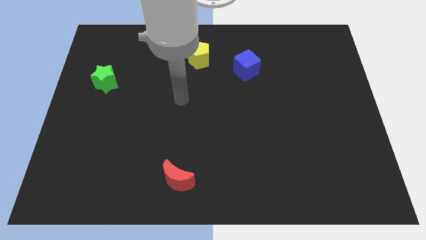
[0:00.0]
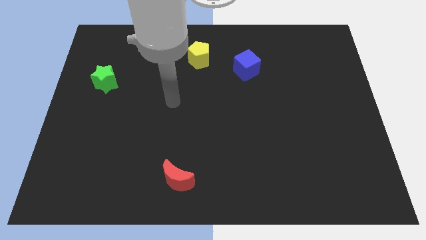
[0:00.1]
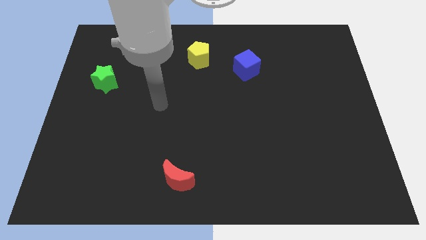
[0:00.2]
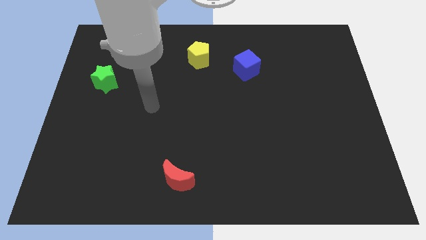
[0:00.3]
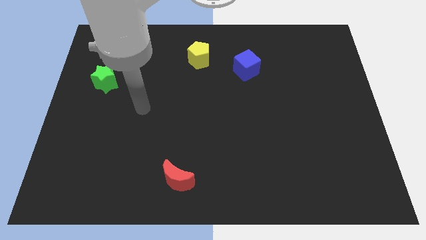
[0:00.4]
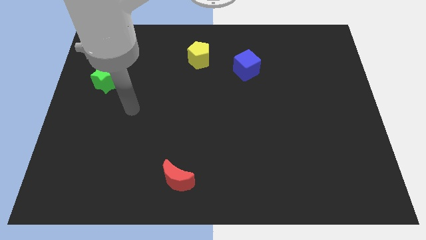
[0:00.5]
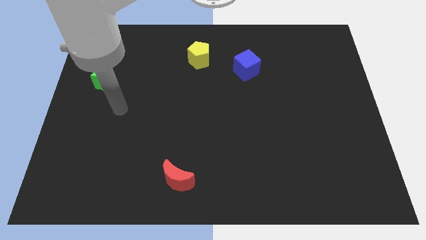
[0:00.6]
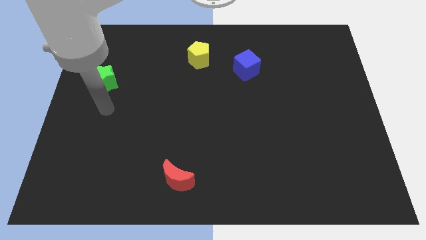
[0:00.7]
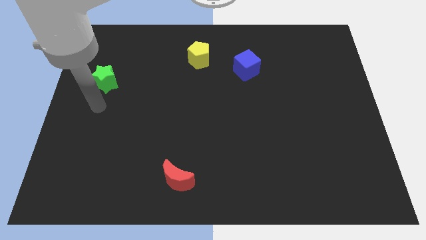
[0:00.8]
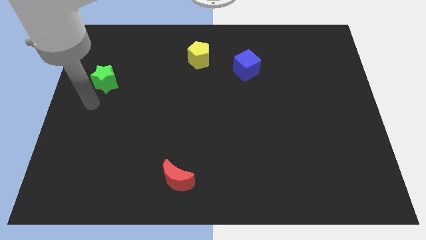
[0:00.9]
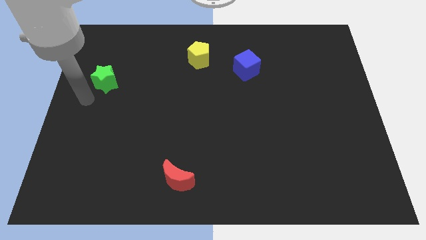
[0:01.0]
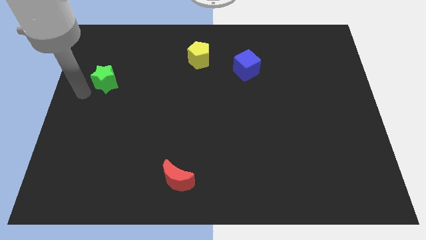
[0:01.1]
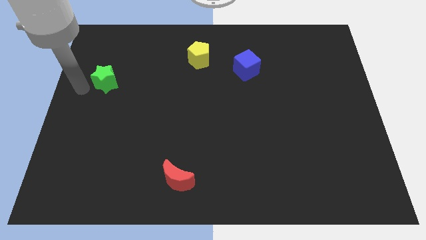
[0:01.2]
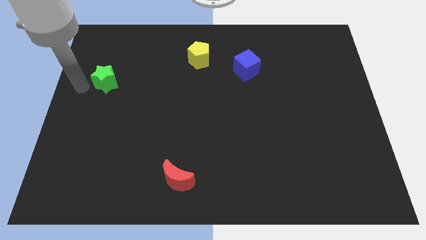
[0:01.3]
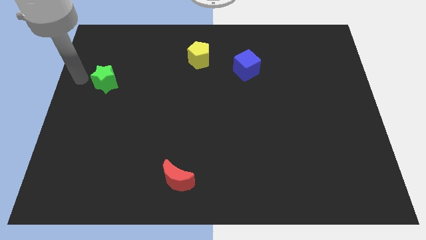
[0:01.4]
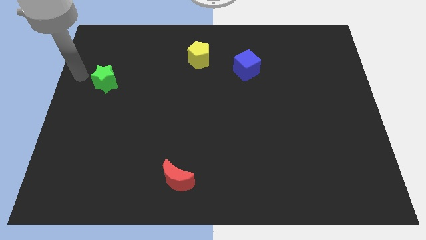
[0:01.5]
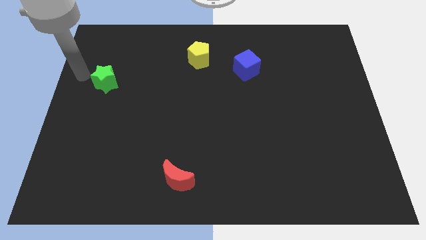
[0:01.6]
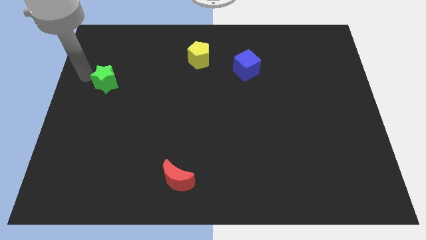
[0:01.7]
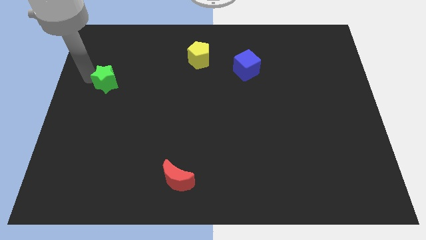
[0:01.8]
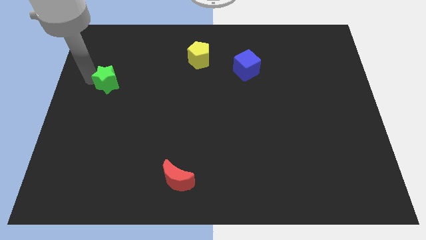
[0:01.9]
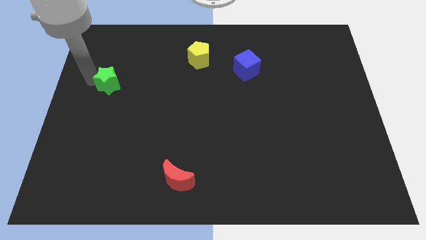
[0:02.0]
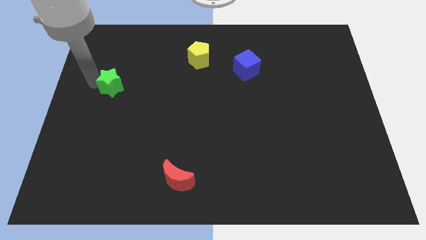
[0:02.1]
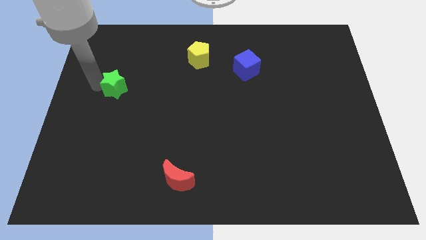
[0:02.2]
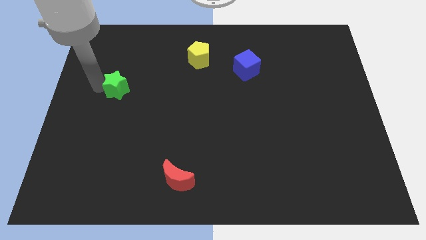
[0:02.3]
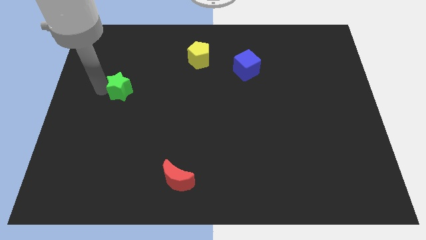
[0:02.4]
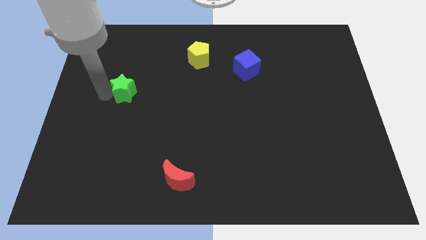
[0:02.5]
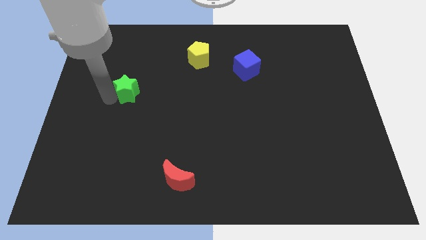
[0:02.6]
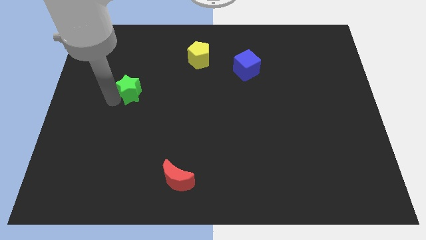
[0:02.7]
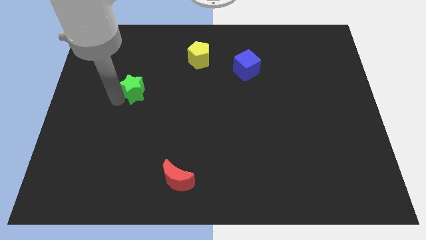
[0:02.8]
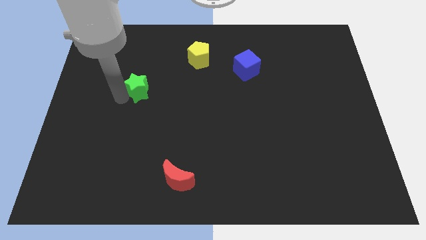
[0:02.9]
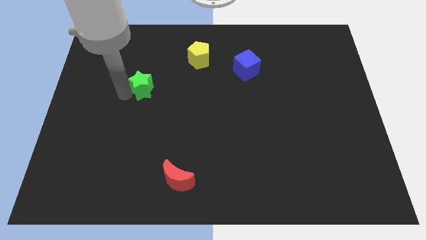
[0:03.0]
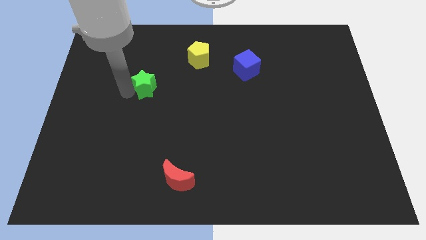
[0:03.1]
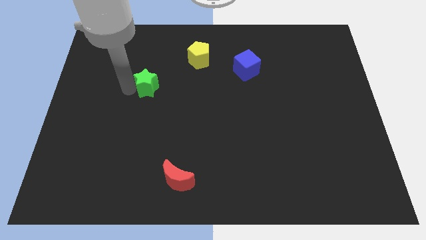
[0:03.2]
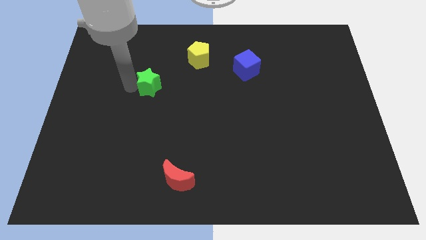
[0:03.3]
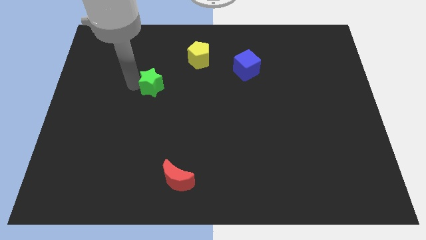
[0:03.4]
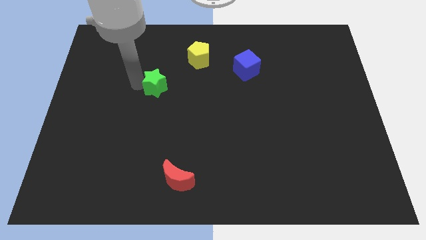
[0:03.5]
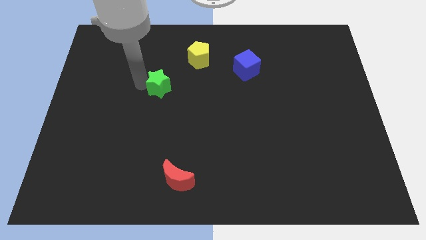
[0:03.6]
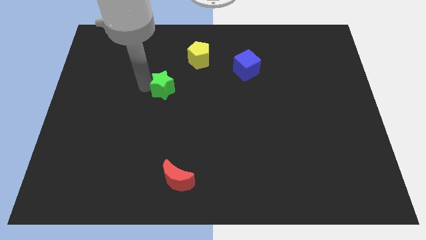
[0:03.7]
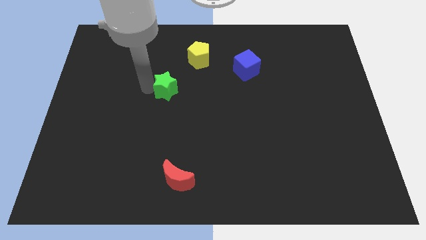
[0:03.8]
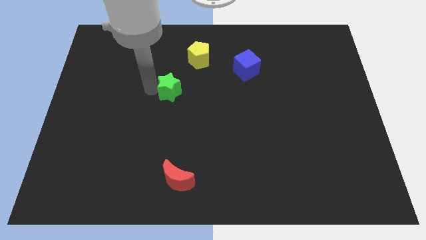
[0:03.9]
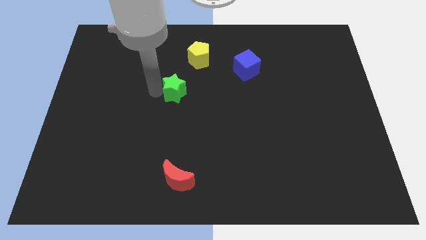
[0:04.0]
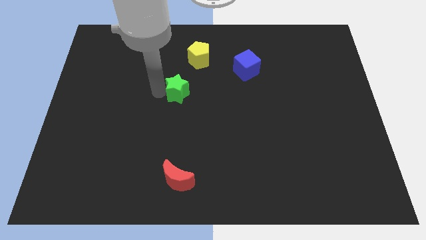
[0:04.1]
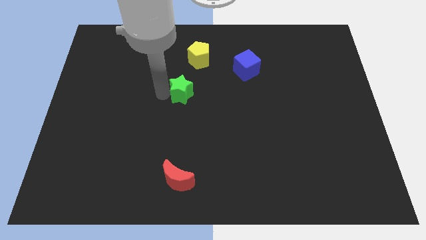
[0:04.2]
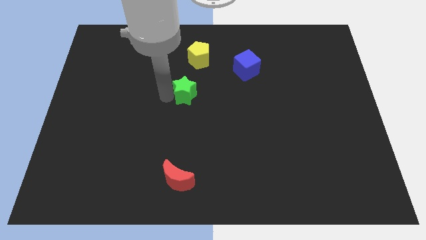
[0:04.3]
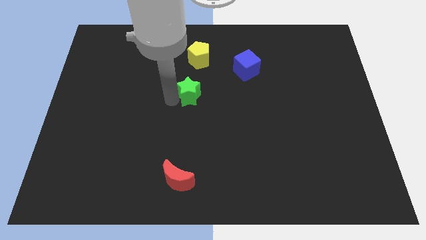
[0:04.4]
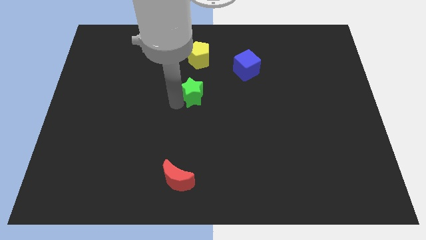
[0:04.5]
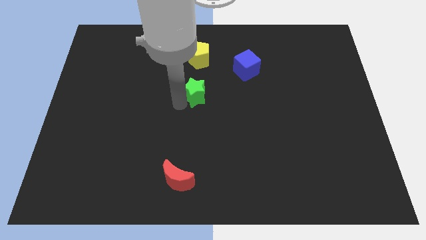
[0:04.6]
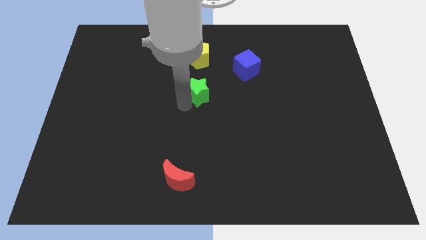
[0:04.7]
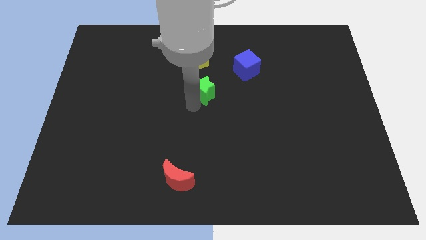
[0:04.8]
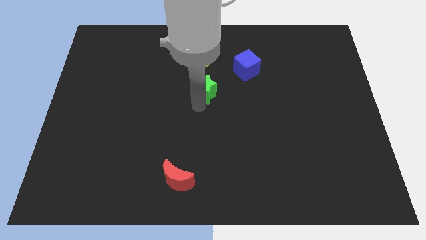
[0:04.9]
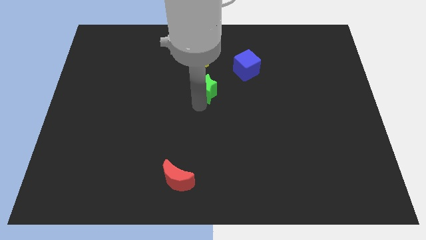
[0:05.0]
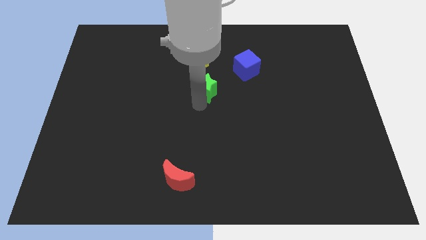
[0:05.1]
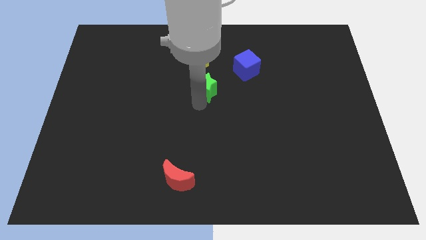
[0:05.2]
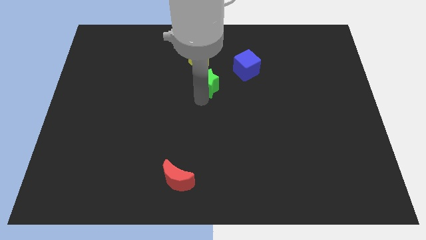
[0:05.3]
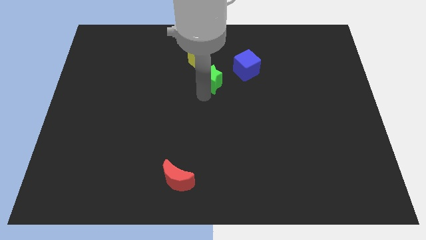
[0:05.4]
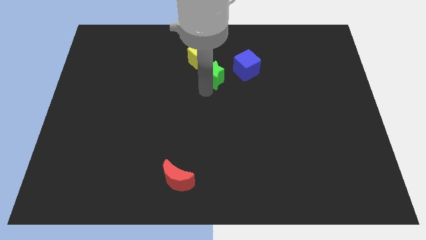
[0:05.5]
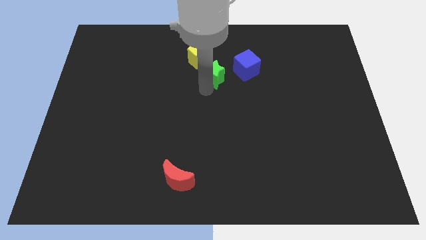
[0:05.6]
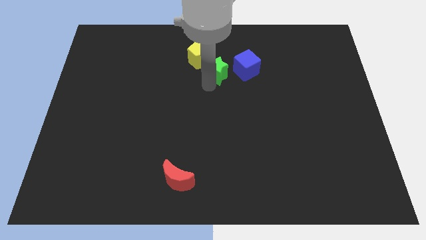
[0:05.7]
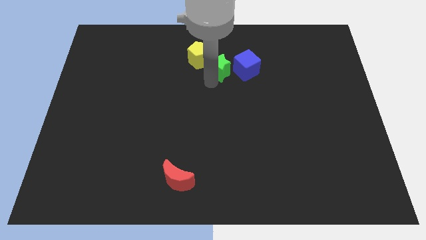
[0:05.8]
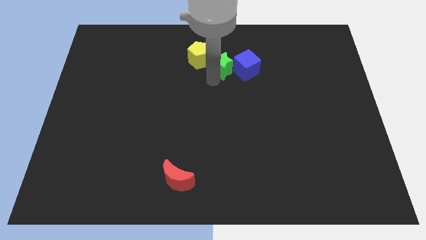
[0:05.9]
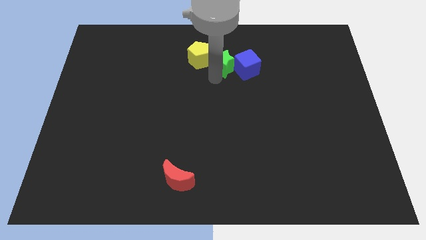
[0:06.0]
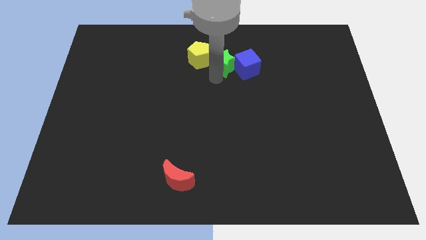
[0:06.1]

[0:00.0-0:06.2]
push the green block close to the blue block

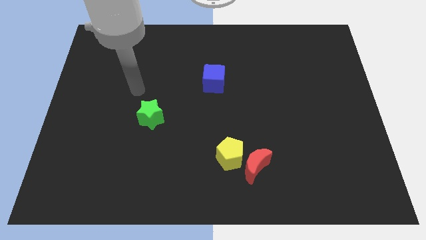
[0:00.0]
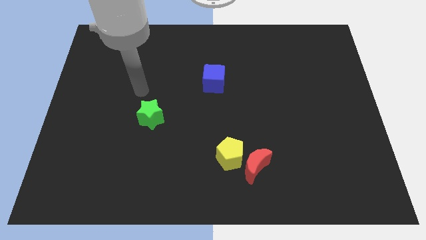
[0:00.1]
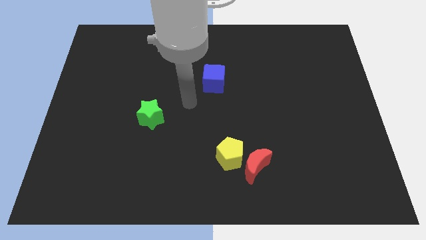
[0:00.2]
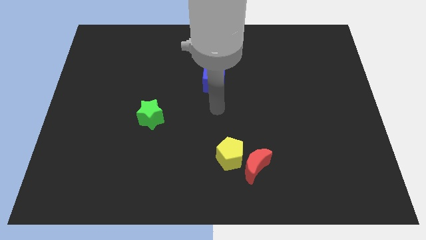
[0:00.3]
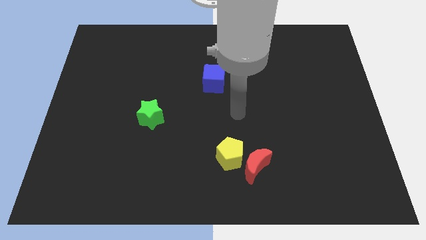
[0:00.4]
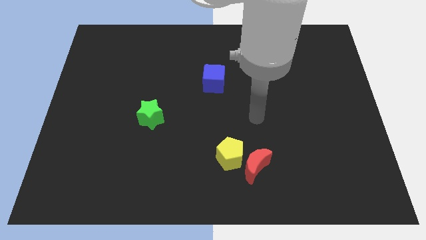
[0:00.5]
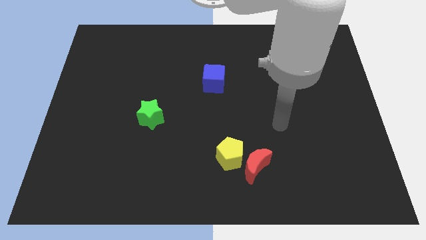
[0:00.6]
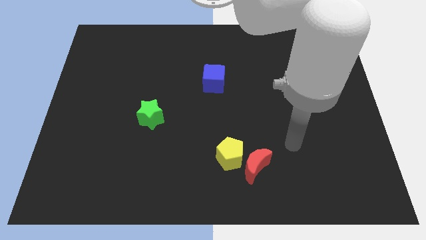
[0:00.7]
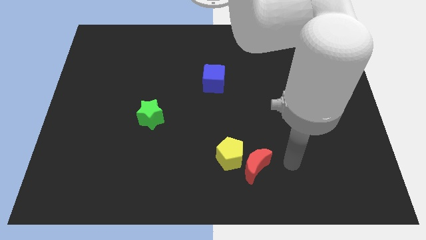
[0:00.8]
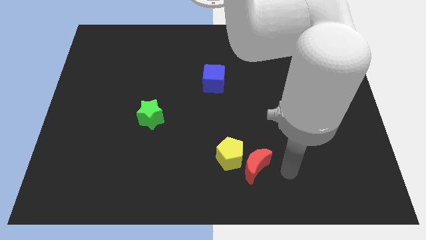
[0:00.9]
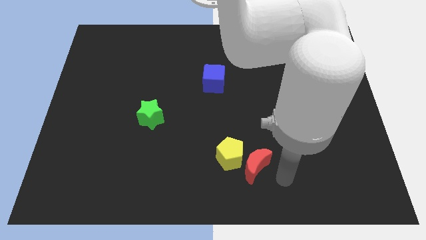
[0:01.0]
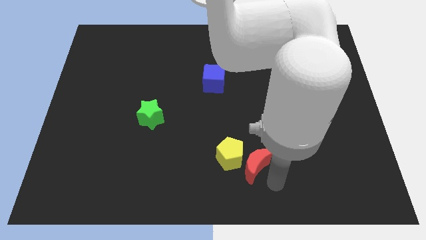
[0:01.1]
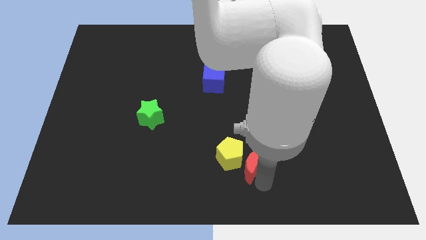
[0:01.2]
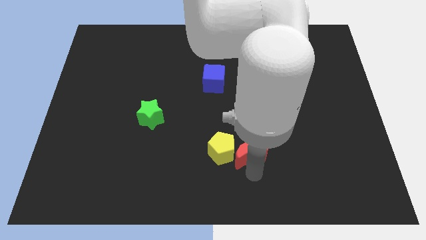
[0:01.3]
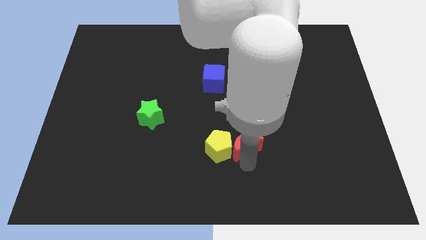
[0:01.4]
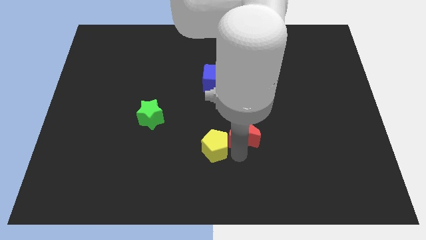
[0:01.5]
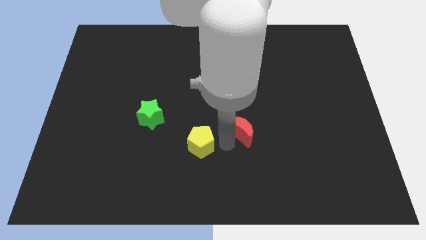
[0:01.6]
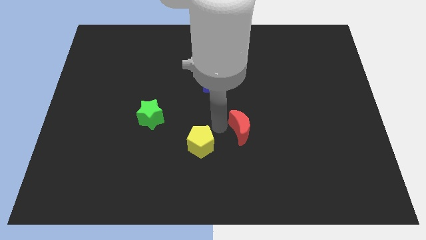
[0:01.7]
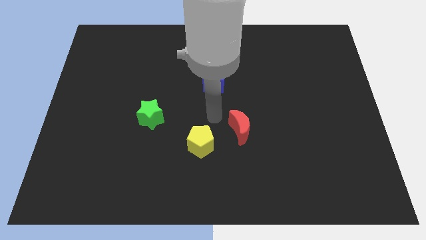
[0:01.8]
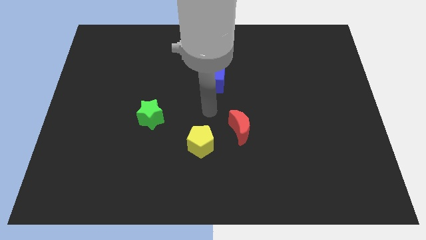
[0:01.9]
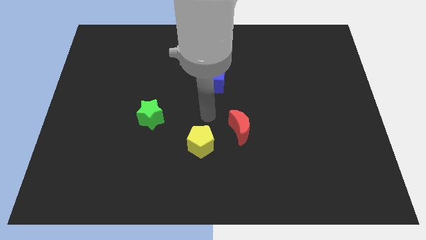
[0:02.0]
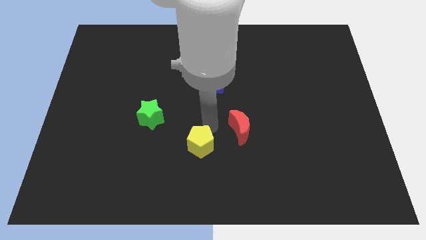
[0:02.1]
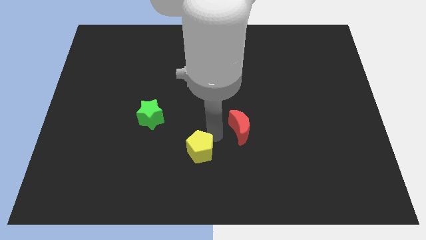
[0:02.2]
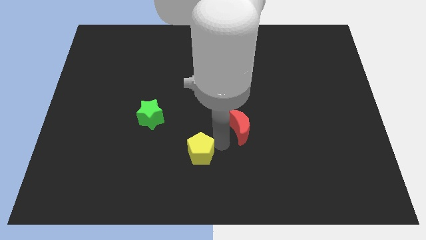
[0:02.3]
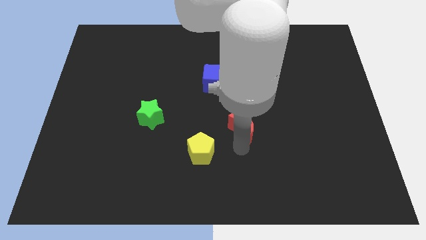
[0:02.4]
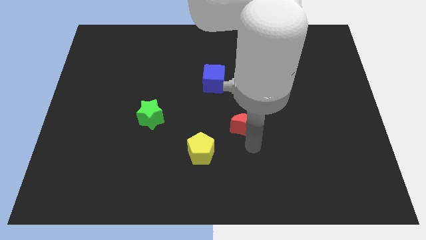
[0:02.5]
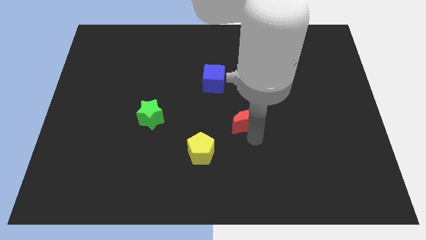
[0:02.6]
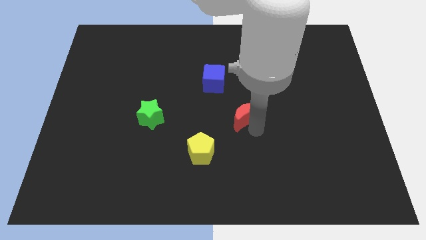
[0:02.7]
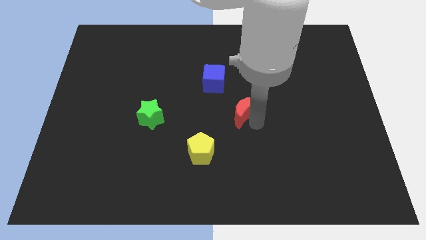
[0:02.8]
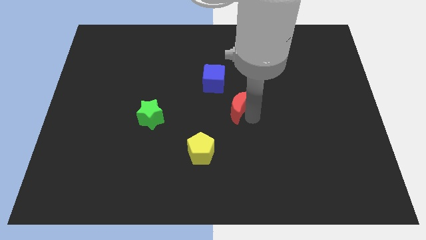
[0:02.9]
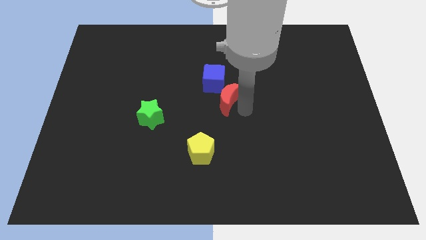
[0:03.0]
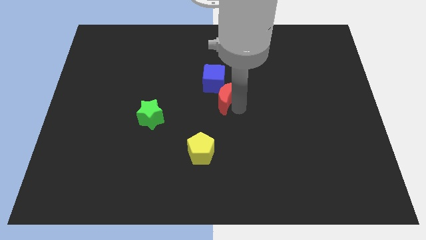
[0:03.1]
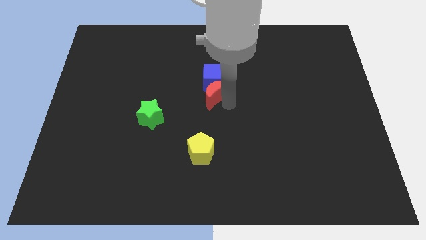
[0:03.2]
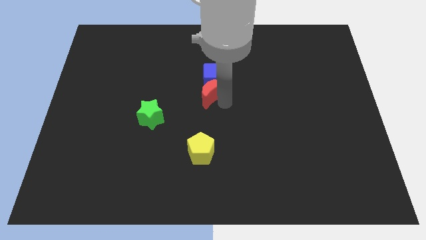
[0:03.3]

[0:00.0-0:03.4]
slide the red block close to the blue cube
